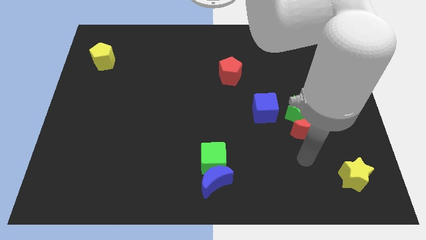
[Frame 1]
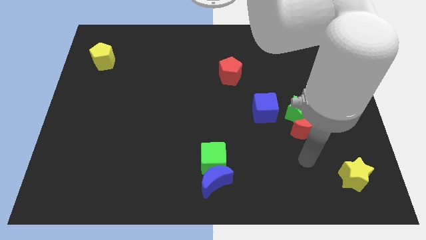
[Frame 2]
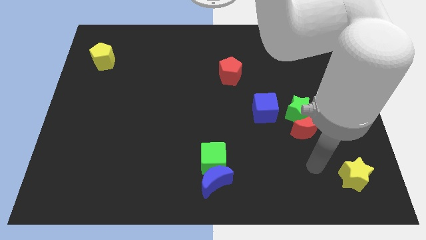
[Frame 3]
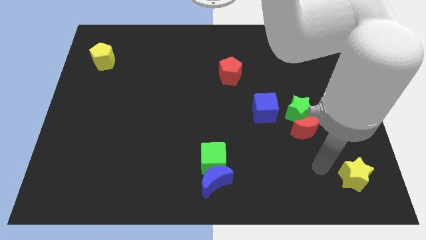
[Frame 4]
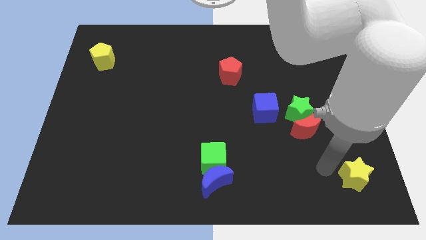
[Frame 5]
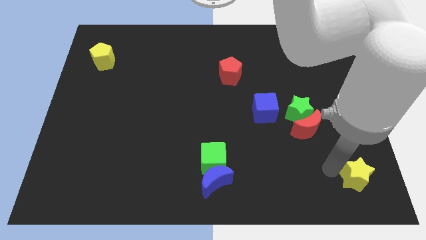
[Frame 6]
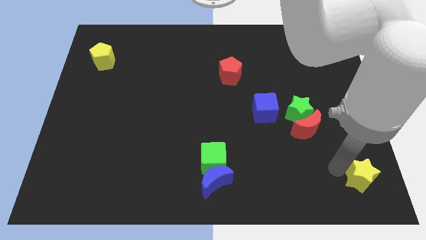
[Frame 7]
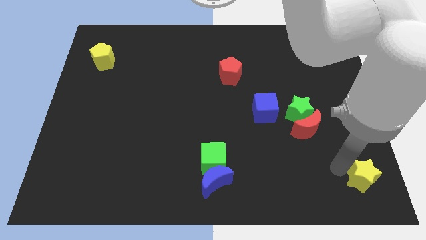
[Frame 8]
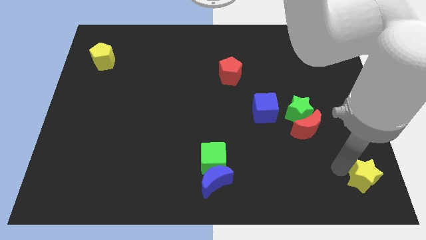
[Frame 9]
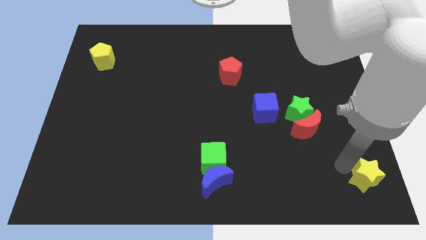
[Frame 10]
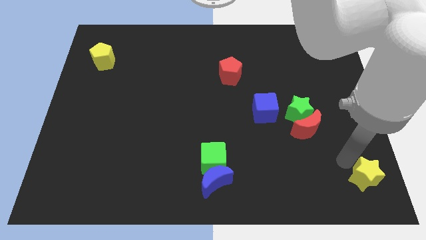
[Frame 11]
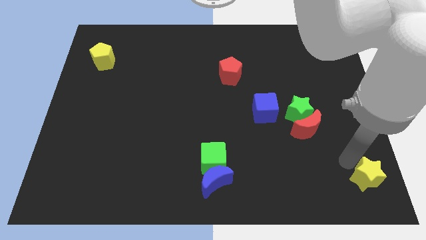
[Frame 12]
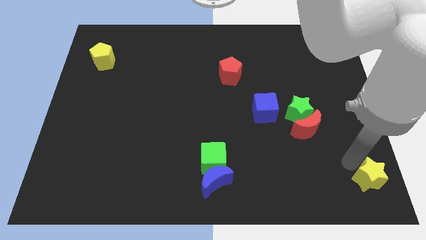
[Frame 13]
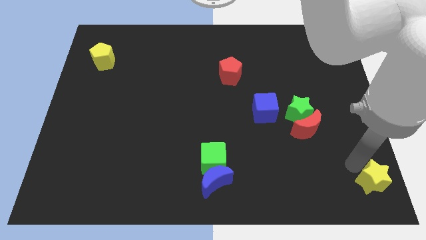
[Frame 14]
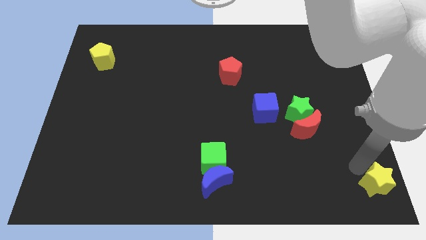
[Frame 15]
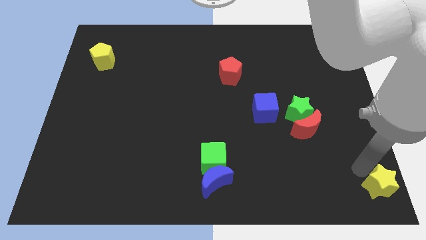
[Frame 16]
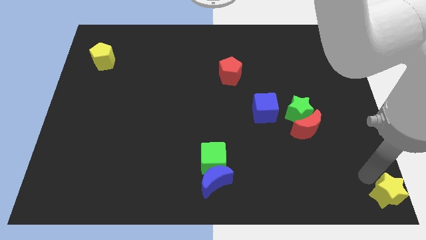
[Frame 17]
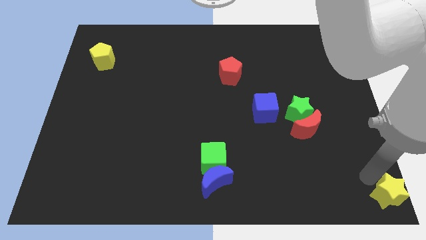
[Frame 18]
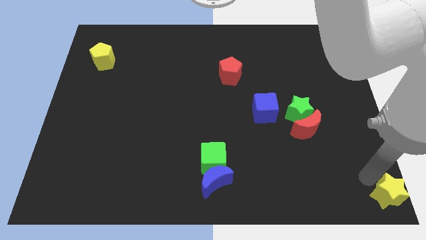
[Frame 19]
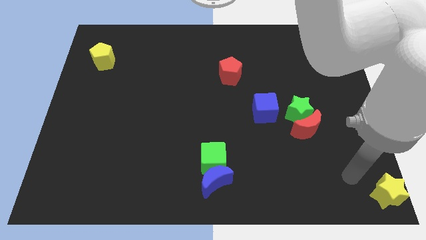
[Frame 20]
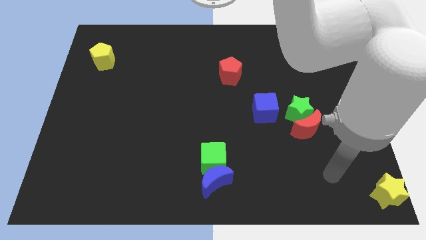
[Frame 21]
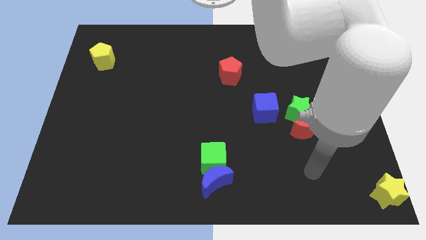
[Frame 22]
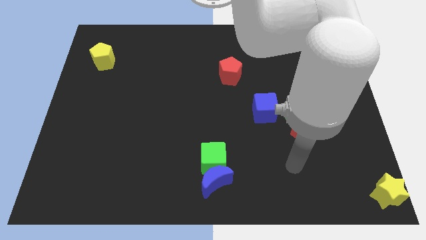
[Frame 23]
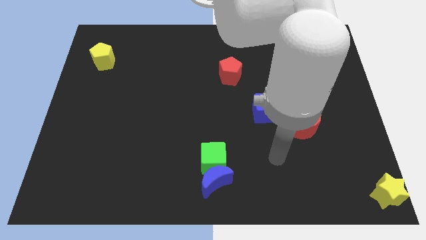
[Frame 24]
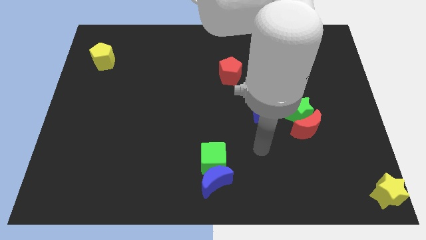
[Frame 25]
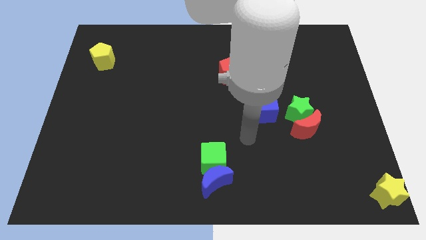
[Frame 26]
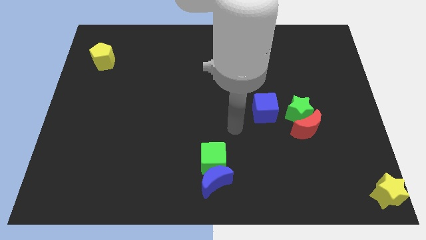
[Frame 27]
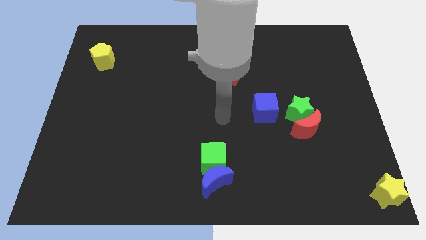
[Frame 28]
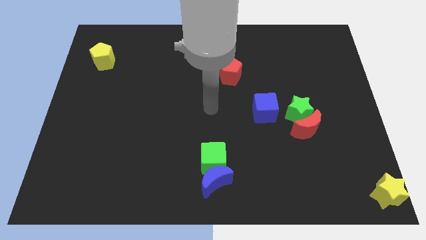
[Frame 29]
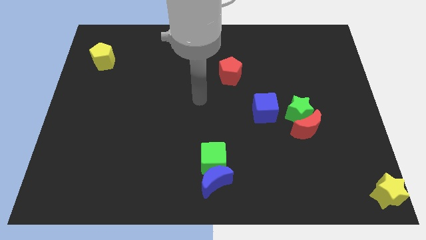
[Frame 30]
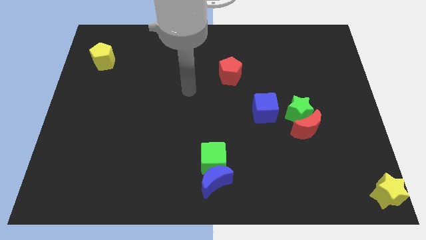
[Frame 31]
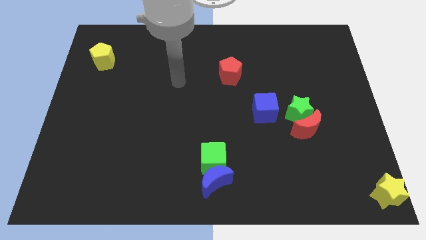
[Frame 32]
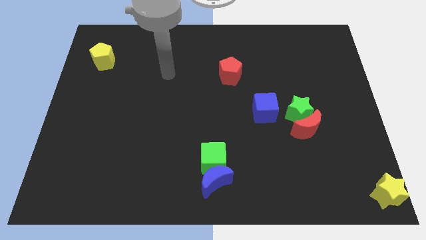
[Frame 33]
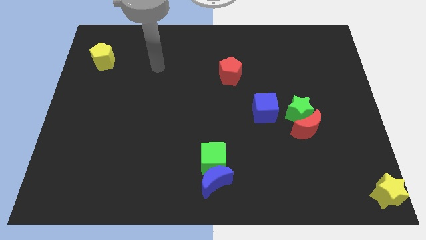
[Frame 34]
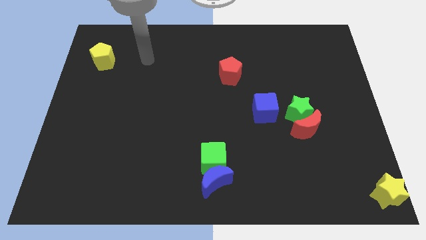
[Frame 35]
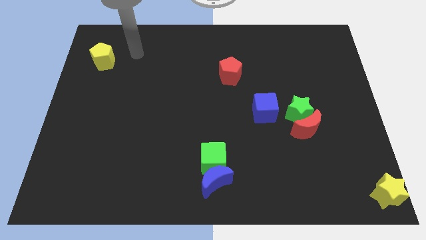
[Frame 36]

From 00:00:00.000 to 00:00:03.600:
push the yellow star bottom right

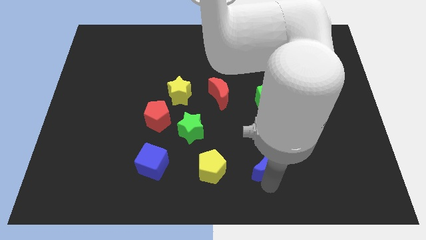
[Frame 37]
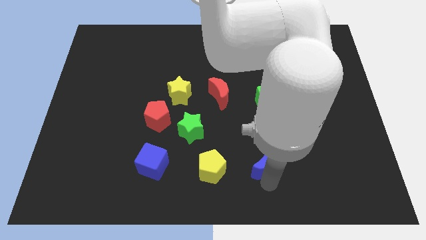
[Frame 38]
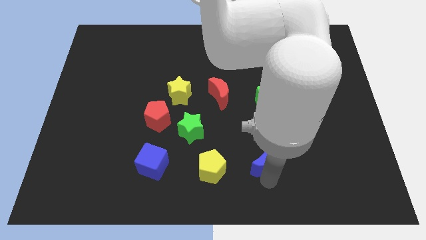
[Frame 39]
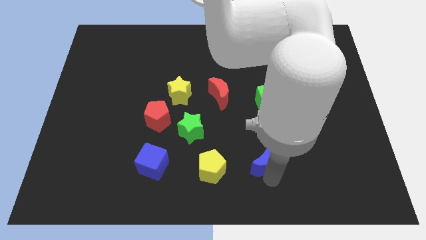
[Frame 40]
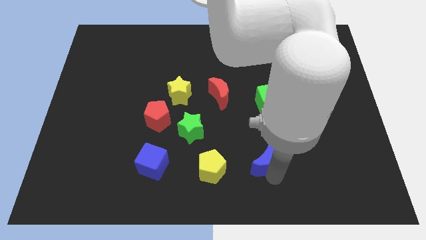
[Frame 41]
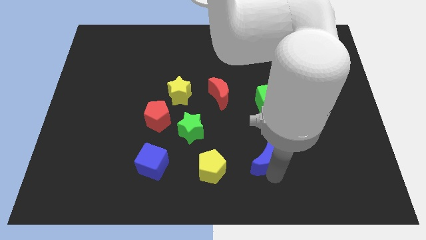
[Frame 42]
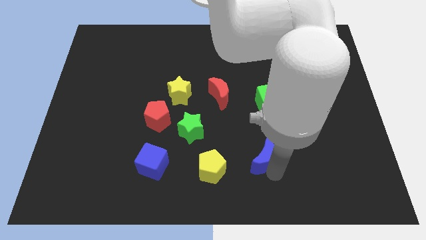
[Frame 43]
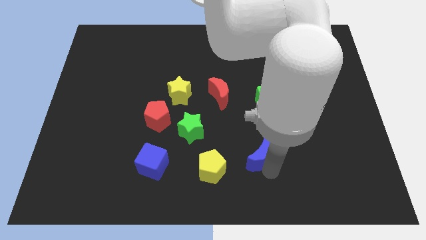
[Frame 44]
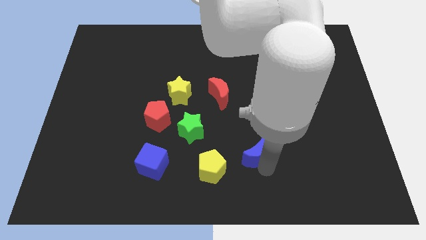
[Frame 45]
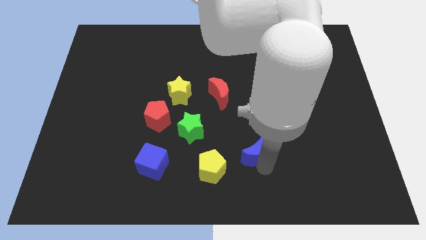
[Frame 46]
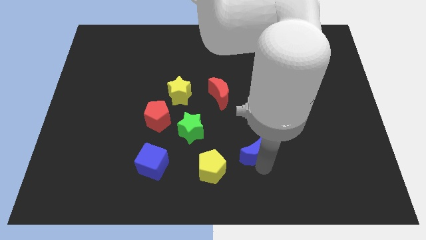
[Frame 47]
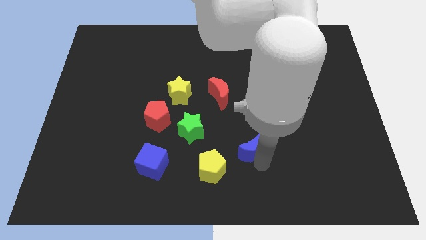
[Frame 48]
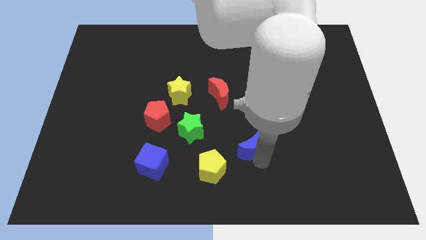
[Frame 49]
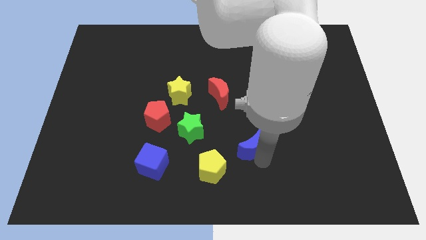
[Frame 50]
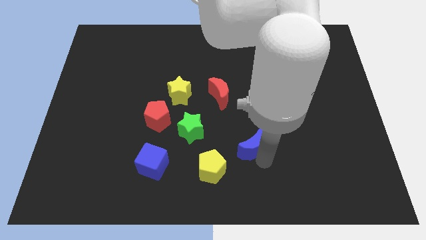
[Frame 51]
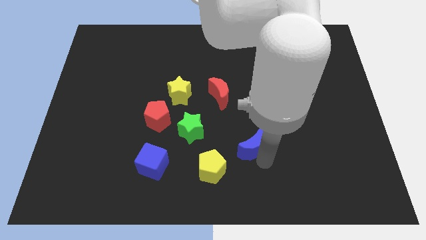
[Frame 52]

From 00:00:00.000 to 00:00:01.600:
move the blue moon upwards

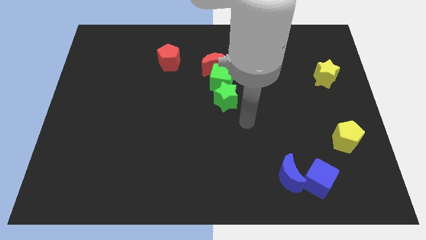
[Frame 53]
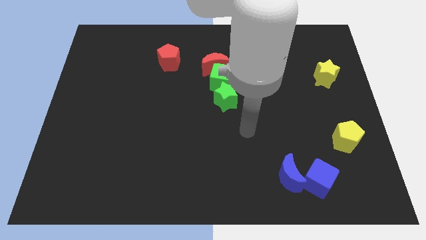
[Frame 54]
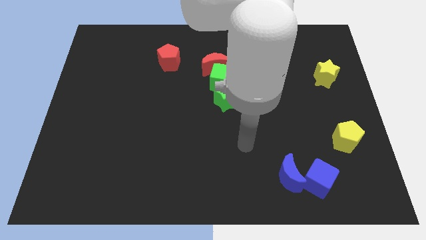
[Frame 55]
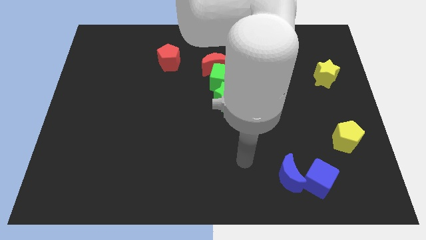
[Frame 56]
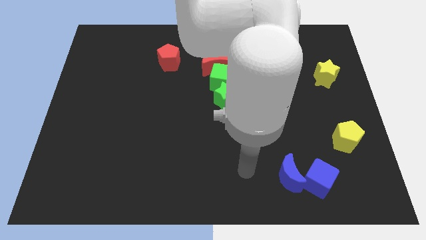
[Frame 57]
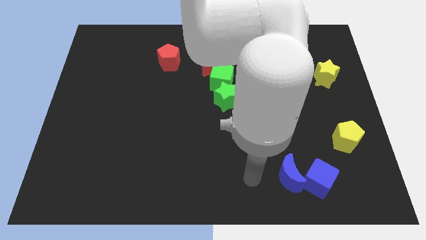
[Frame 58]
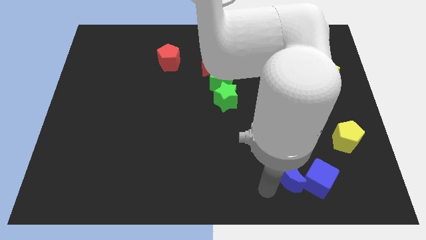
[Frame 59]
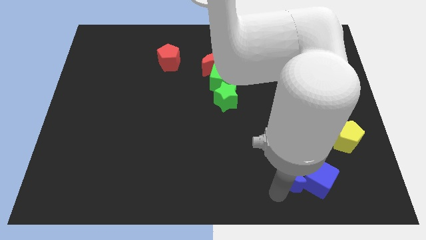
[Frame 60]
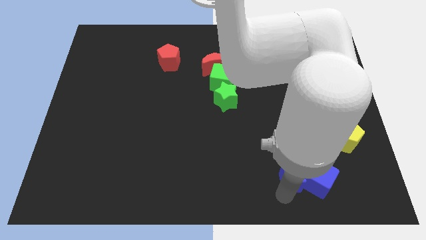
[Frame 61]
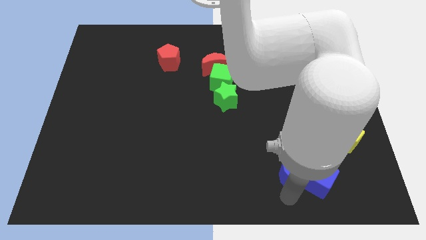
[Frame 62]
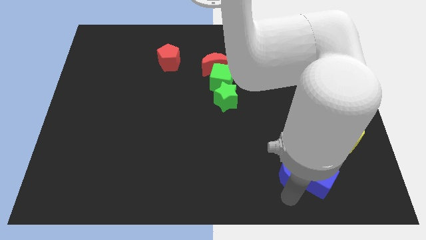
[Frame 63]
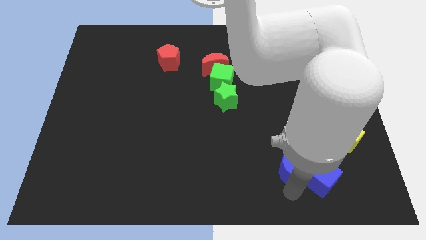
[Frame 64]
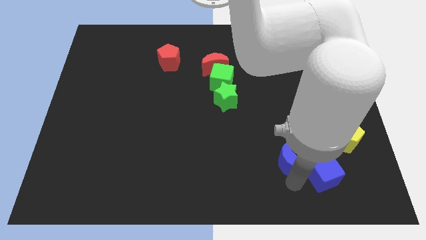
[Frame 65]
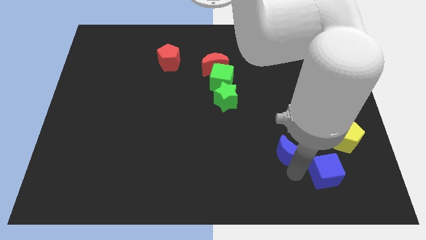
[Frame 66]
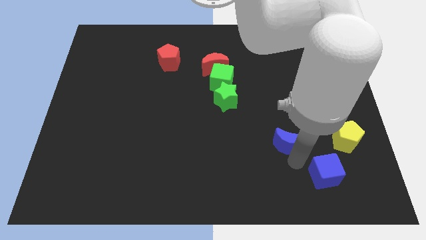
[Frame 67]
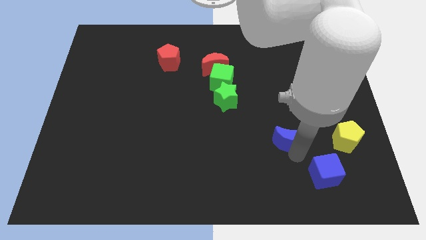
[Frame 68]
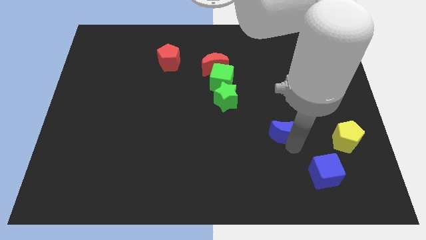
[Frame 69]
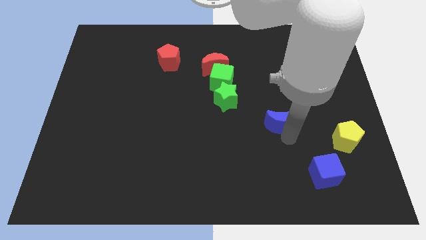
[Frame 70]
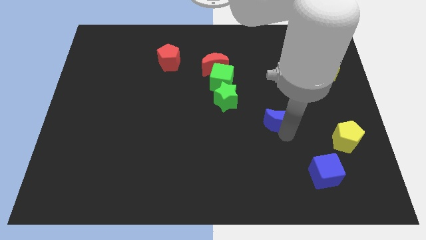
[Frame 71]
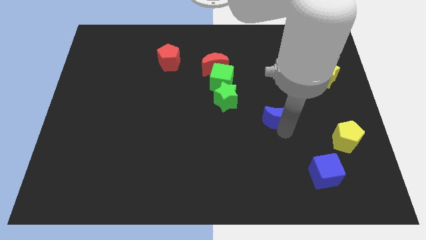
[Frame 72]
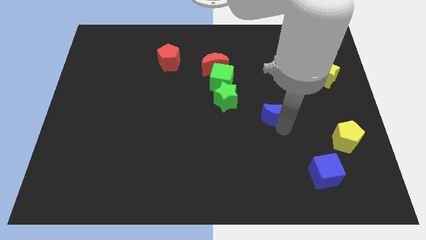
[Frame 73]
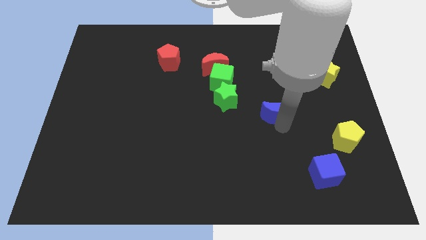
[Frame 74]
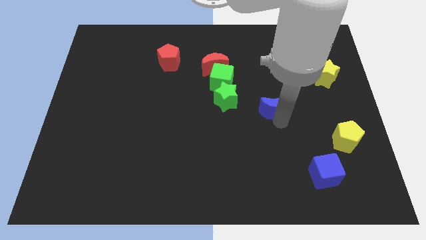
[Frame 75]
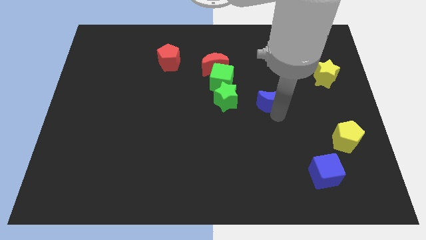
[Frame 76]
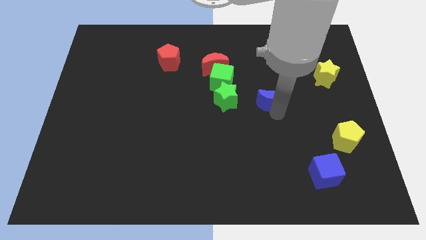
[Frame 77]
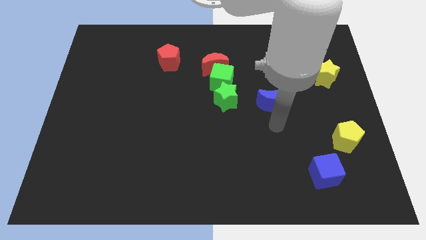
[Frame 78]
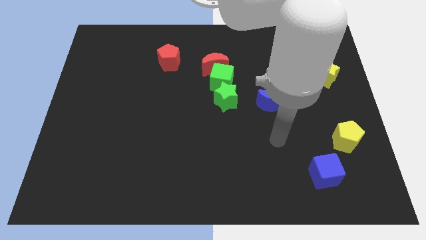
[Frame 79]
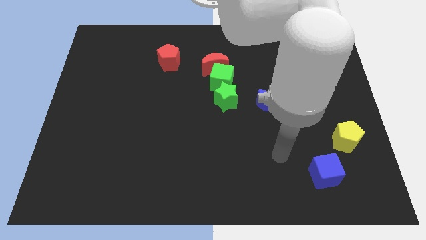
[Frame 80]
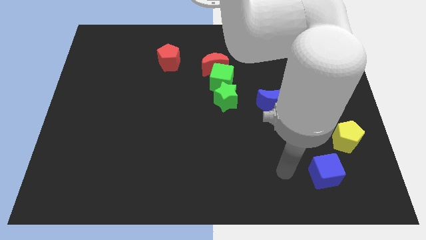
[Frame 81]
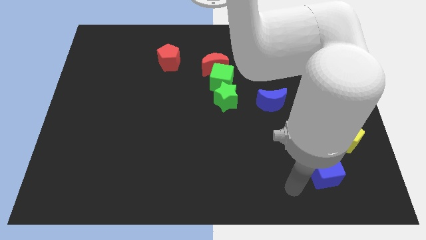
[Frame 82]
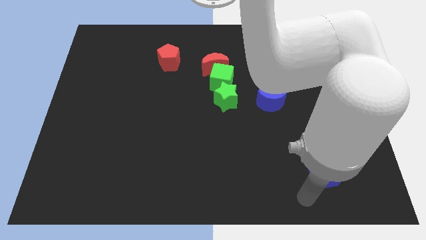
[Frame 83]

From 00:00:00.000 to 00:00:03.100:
separate the blue moon from a blue cube

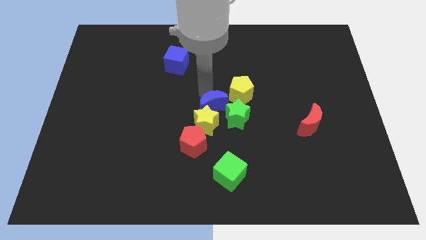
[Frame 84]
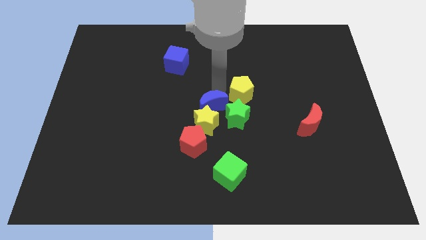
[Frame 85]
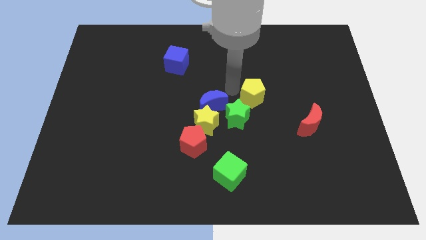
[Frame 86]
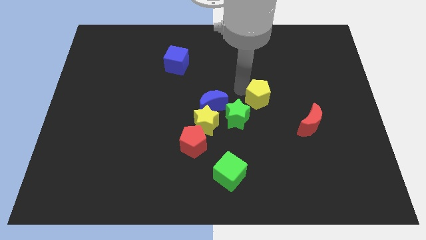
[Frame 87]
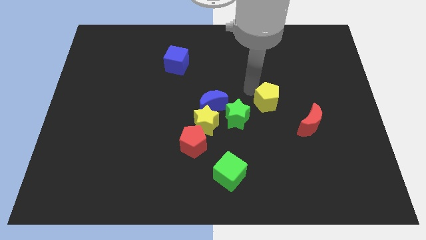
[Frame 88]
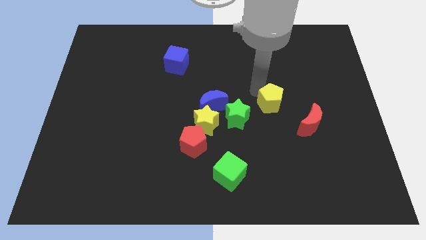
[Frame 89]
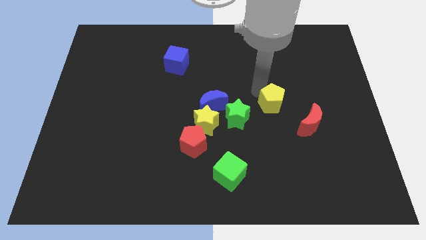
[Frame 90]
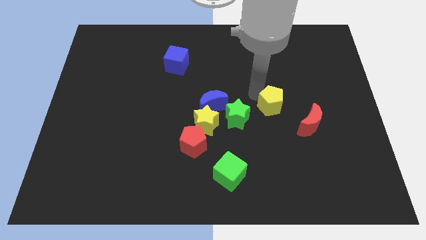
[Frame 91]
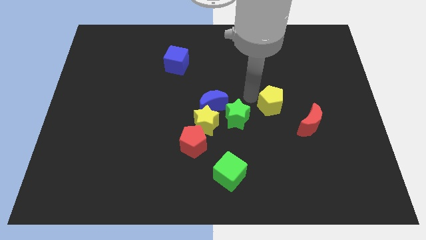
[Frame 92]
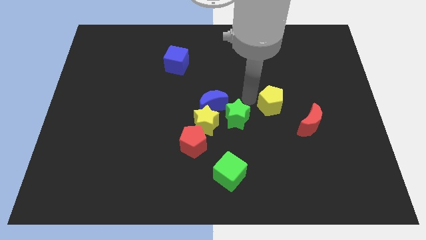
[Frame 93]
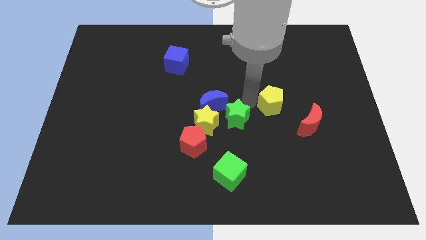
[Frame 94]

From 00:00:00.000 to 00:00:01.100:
push the yellow pentagon to the top right of the green star
